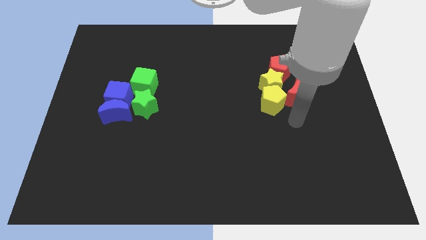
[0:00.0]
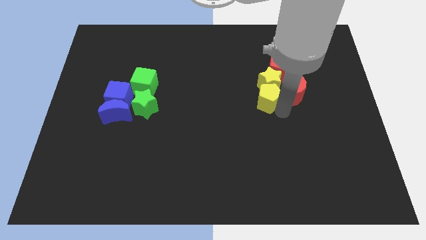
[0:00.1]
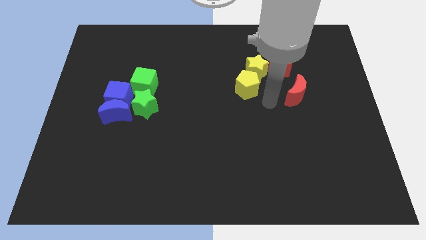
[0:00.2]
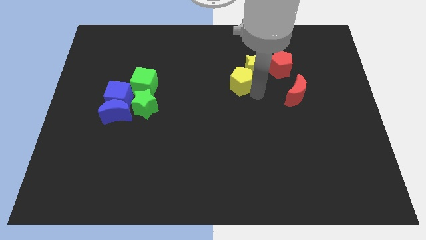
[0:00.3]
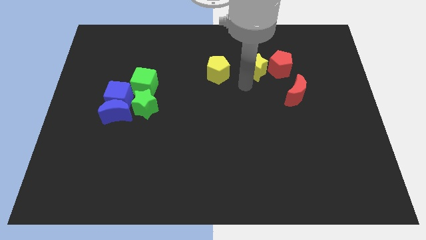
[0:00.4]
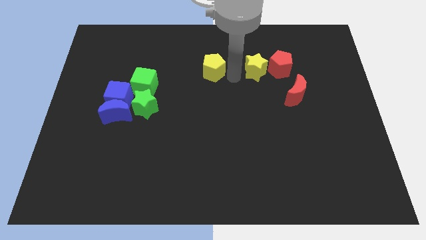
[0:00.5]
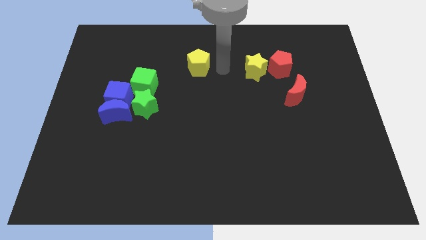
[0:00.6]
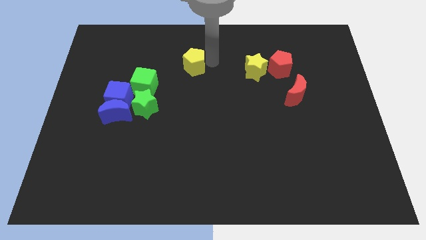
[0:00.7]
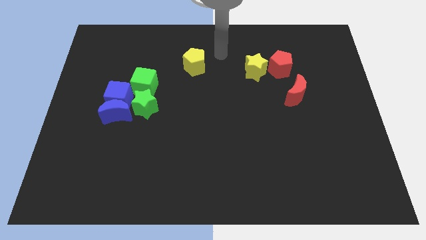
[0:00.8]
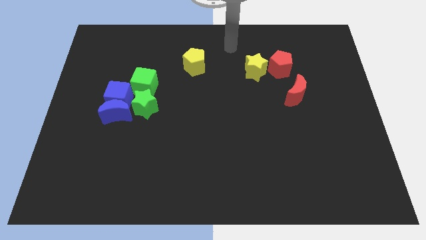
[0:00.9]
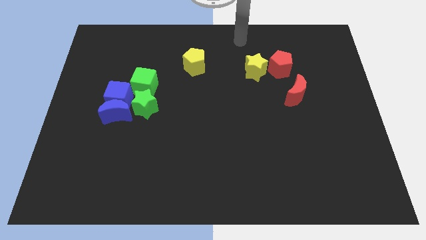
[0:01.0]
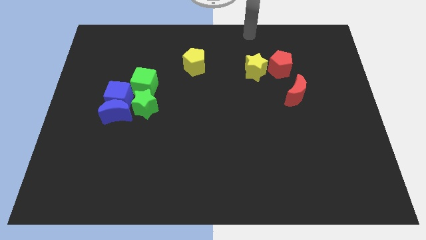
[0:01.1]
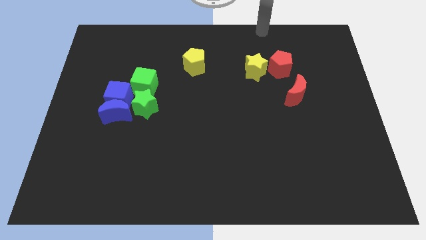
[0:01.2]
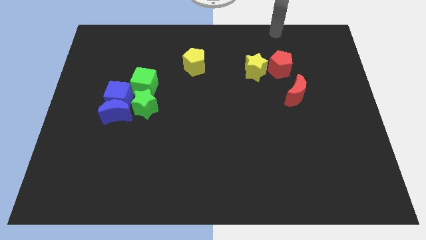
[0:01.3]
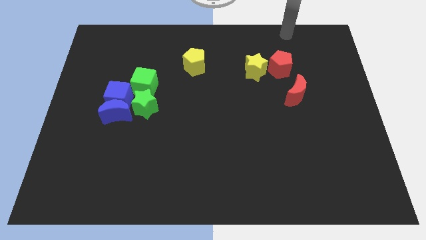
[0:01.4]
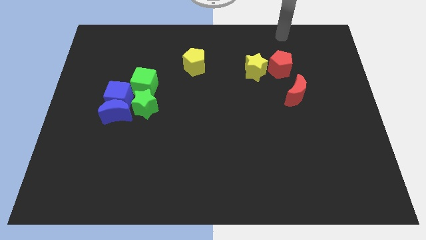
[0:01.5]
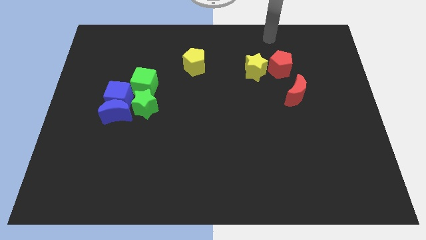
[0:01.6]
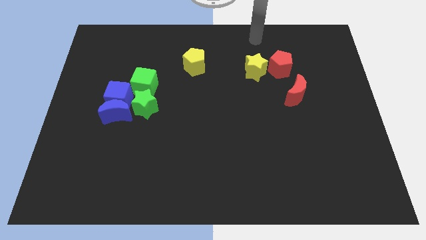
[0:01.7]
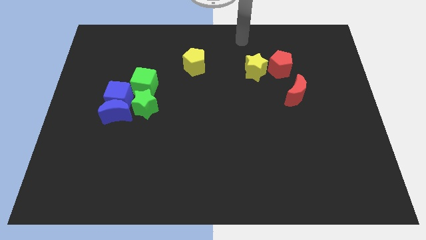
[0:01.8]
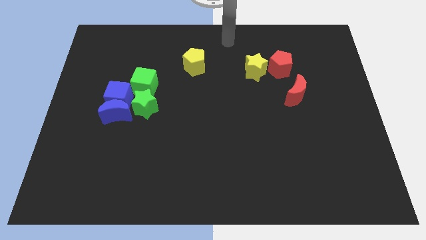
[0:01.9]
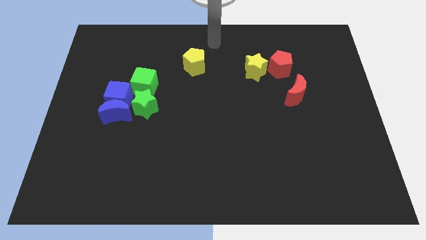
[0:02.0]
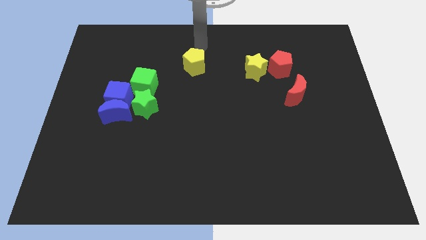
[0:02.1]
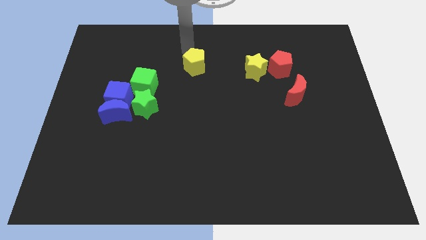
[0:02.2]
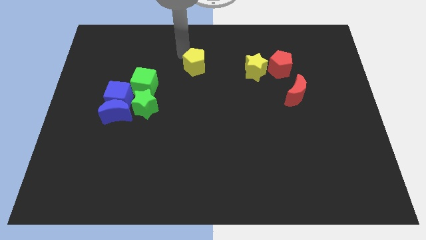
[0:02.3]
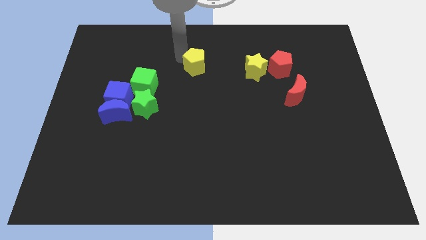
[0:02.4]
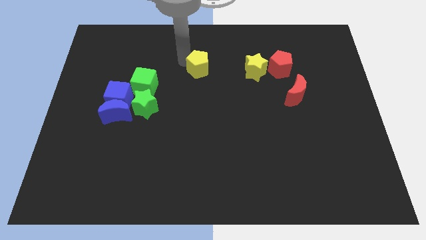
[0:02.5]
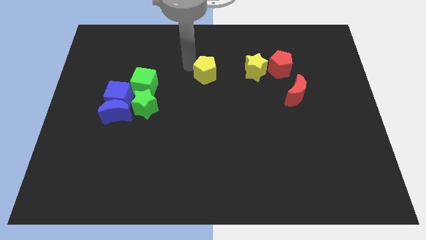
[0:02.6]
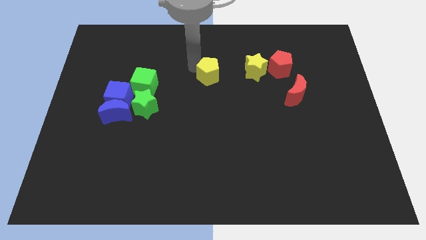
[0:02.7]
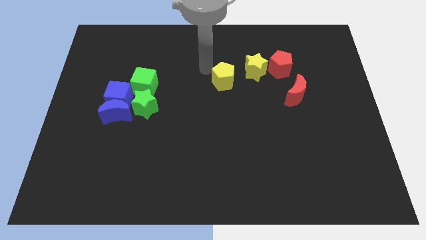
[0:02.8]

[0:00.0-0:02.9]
separate the yellow pentagon from the yellow star

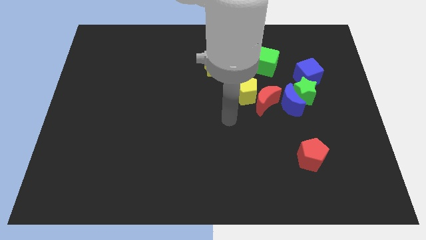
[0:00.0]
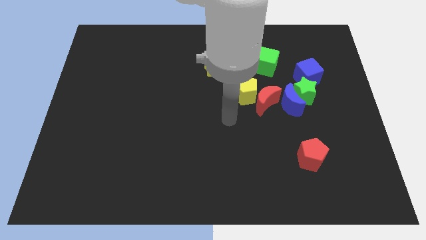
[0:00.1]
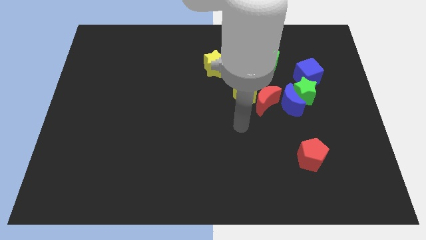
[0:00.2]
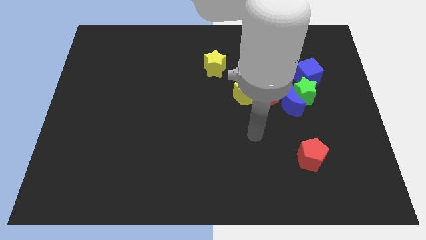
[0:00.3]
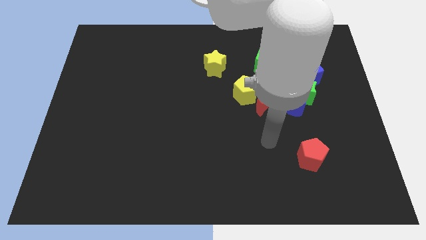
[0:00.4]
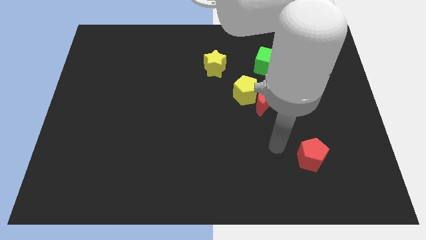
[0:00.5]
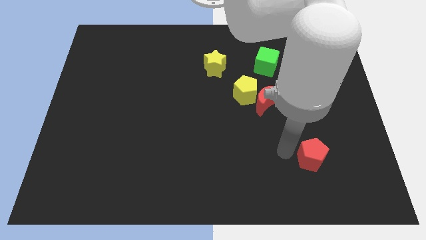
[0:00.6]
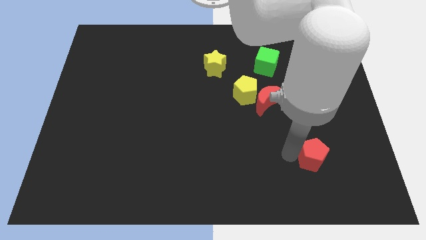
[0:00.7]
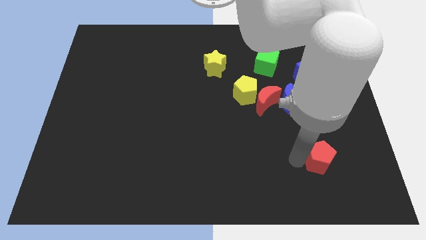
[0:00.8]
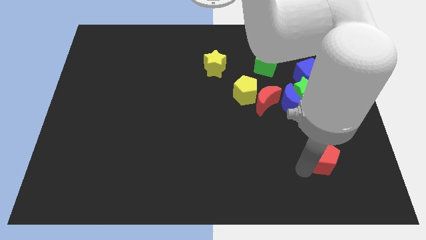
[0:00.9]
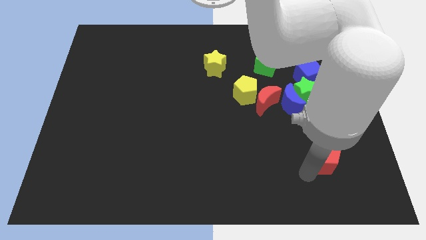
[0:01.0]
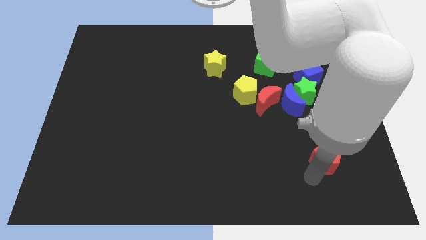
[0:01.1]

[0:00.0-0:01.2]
move the red pentagon down slightly

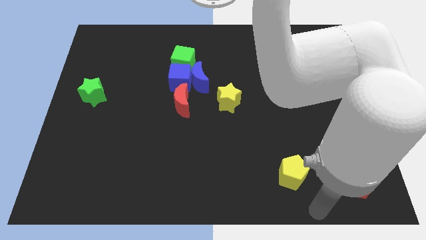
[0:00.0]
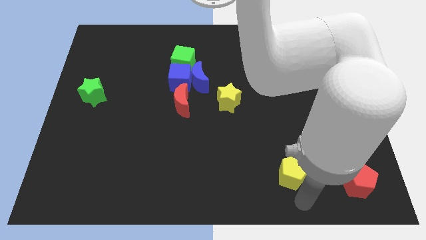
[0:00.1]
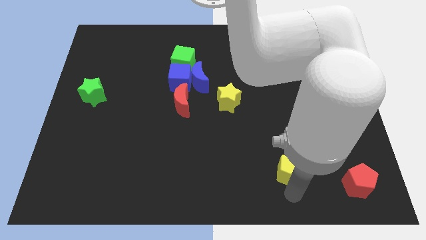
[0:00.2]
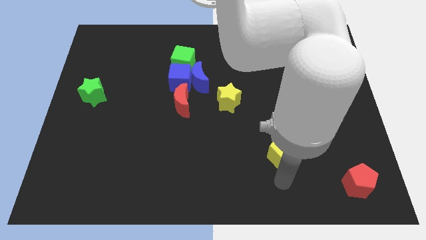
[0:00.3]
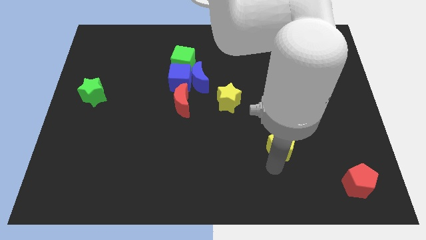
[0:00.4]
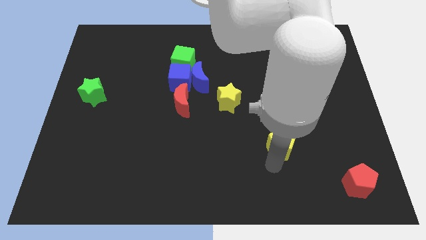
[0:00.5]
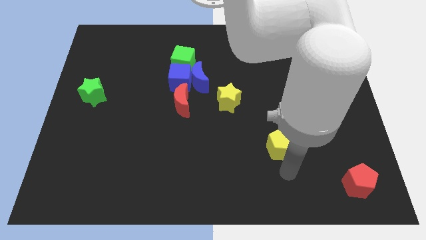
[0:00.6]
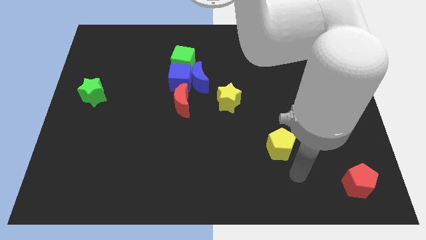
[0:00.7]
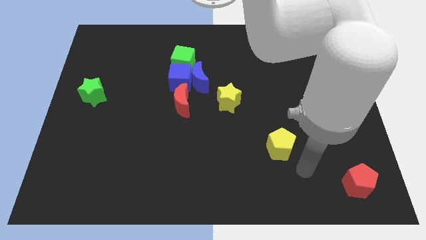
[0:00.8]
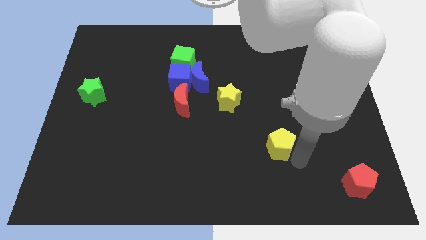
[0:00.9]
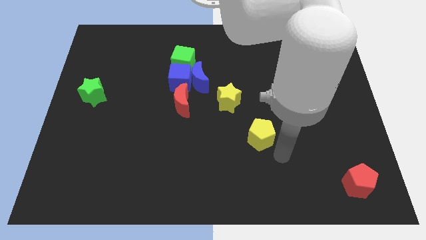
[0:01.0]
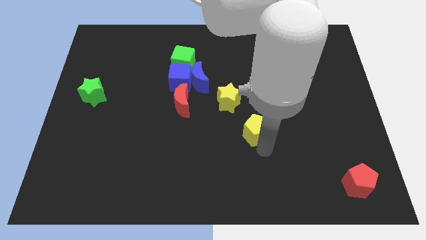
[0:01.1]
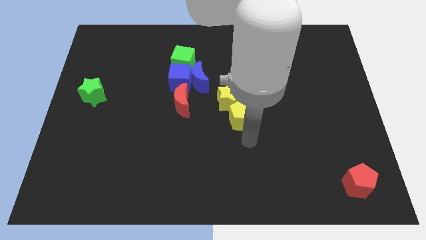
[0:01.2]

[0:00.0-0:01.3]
place the yellow pentagon at the bottom of the yellow star

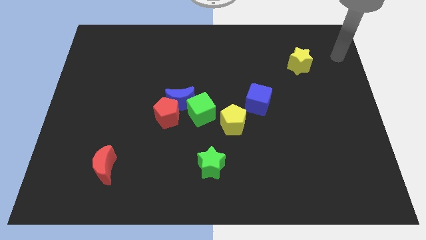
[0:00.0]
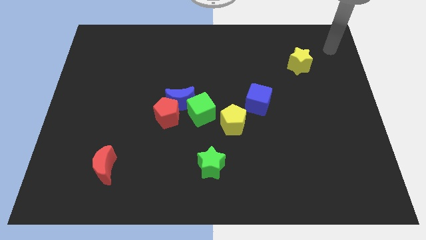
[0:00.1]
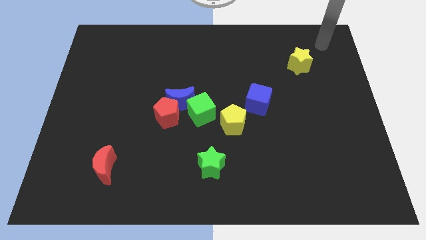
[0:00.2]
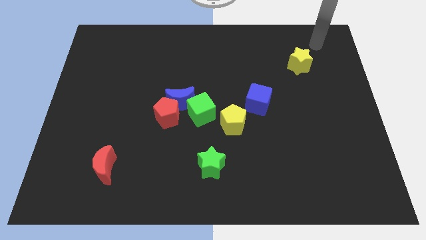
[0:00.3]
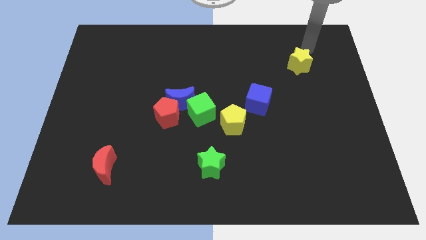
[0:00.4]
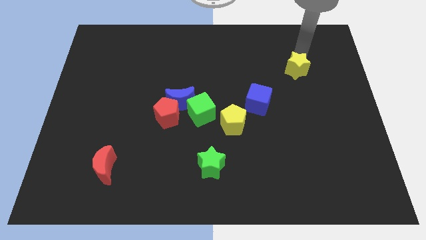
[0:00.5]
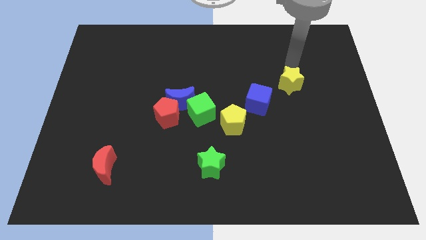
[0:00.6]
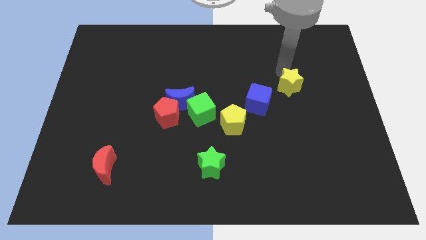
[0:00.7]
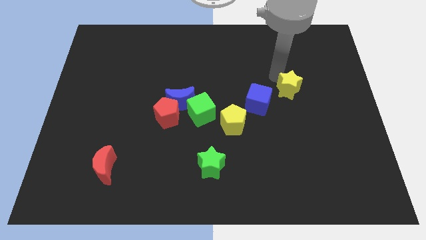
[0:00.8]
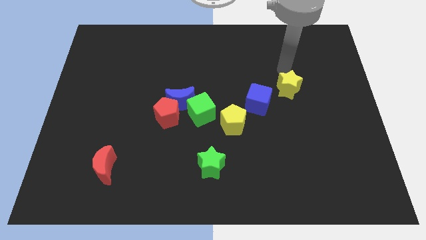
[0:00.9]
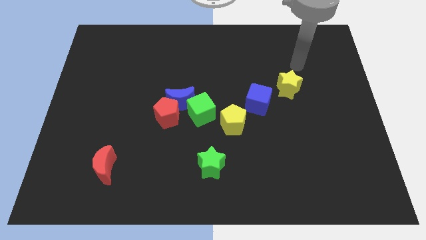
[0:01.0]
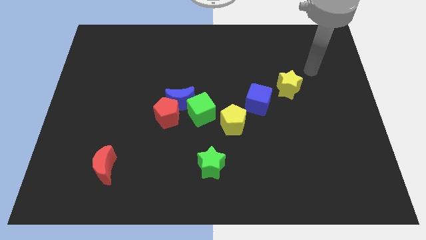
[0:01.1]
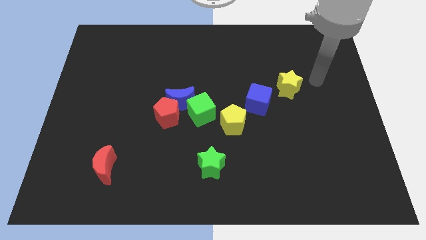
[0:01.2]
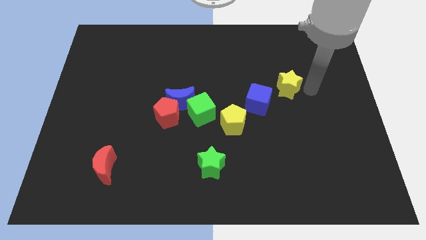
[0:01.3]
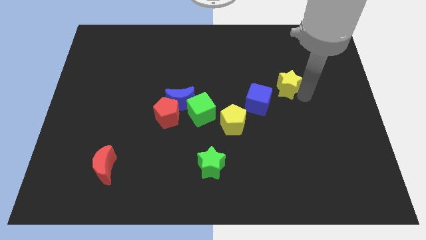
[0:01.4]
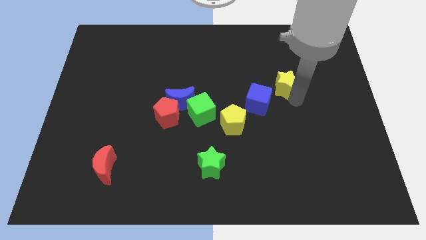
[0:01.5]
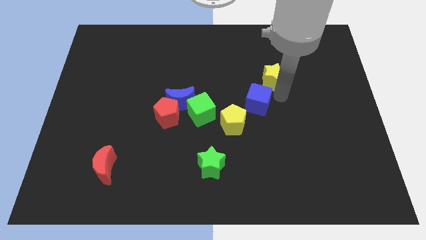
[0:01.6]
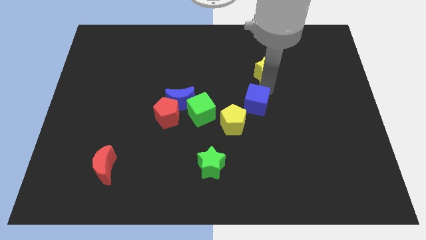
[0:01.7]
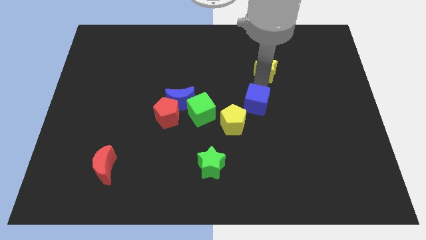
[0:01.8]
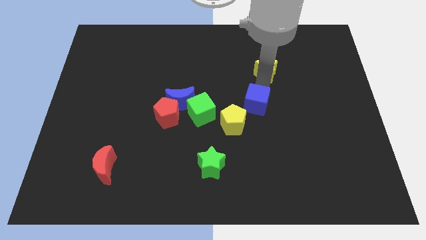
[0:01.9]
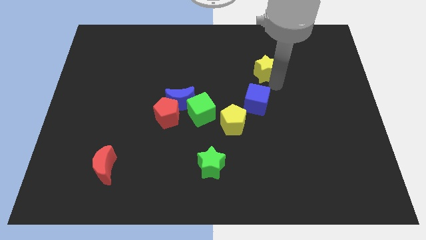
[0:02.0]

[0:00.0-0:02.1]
place the yellow star above the blue cube

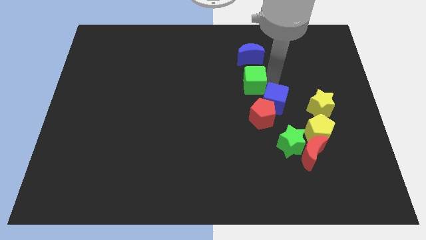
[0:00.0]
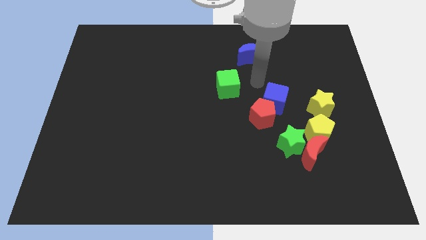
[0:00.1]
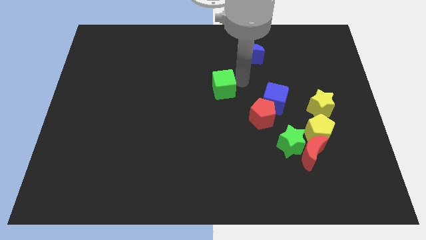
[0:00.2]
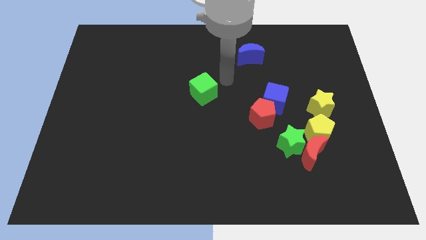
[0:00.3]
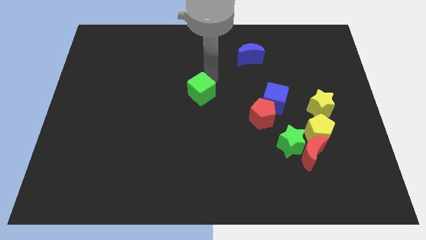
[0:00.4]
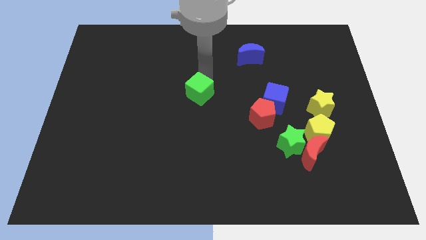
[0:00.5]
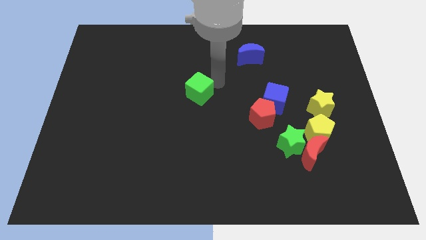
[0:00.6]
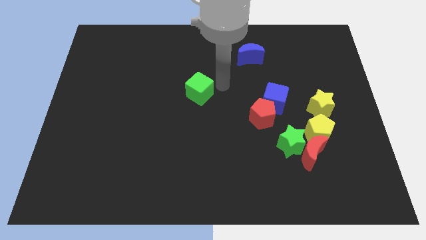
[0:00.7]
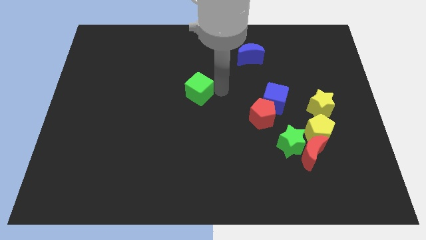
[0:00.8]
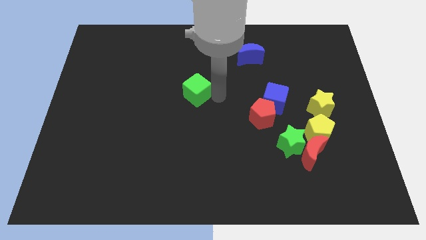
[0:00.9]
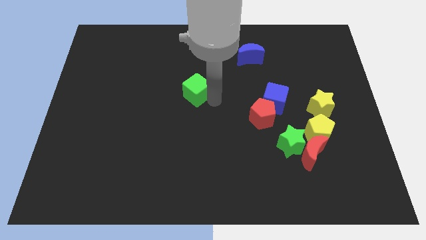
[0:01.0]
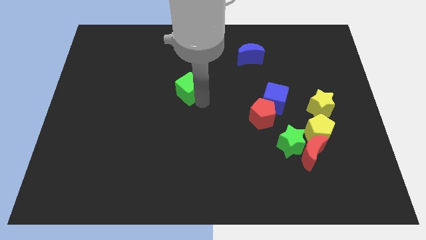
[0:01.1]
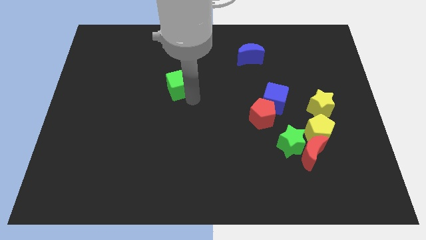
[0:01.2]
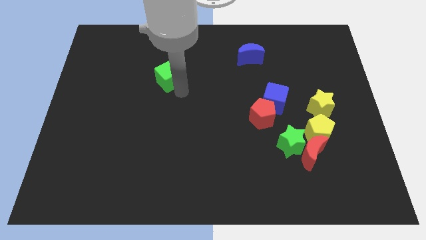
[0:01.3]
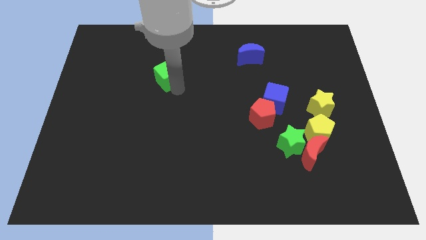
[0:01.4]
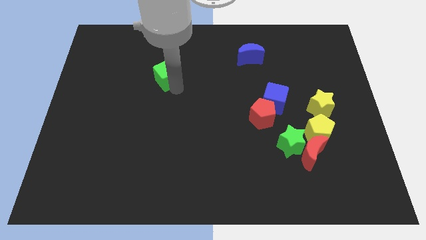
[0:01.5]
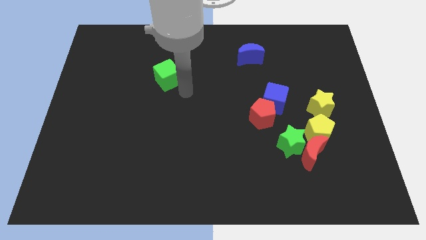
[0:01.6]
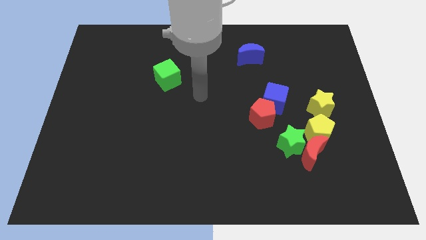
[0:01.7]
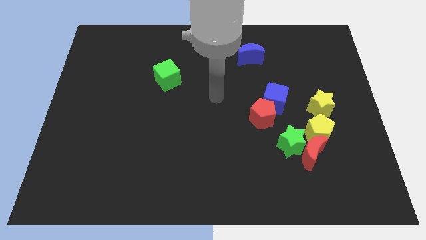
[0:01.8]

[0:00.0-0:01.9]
separate the green cube from the blue cube
